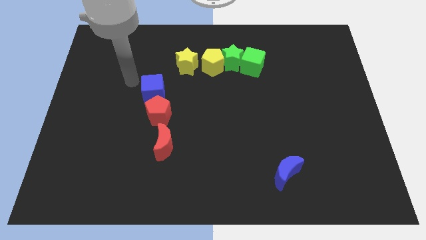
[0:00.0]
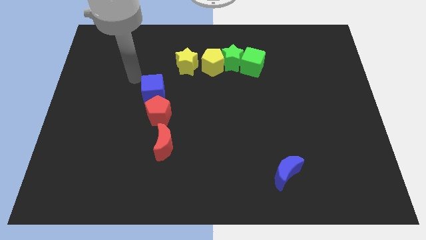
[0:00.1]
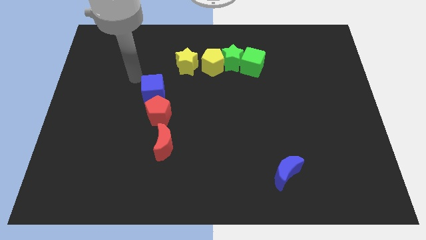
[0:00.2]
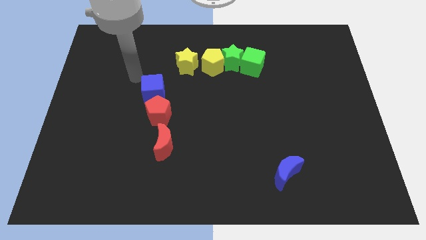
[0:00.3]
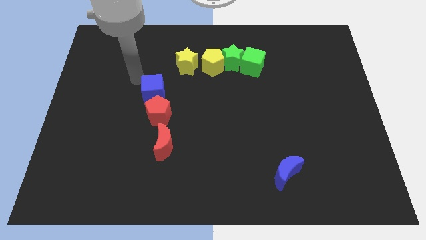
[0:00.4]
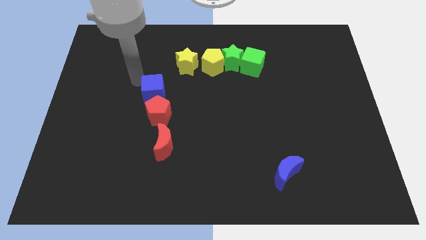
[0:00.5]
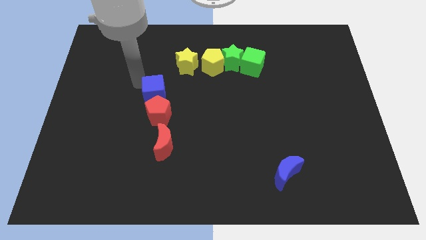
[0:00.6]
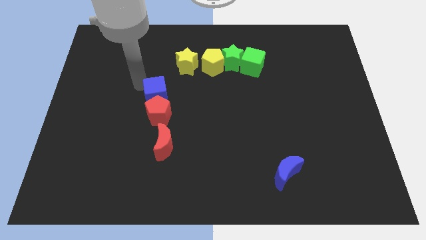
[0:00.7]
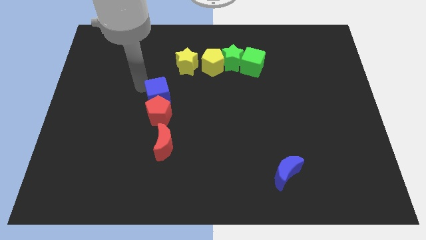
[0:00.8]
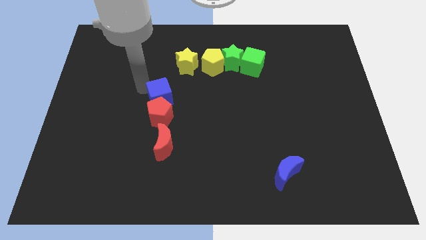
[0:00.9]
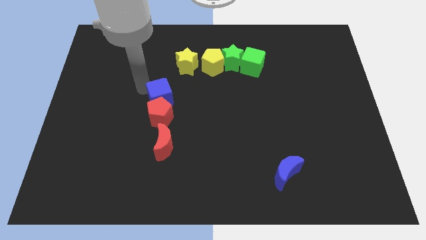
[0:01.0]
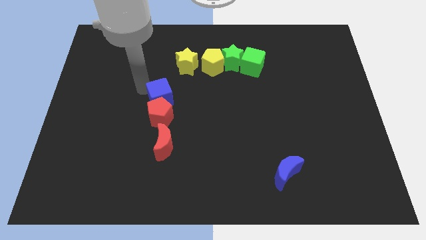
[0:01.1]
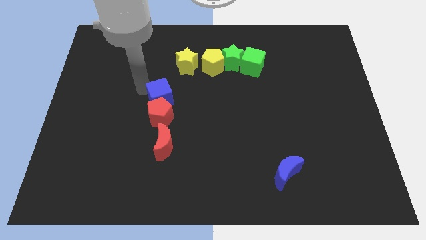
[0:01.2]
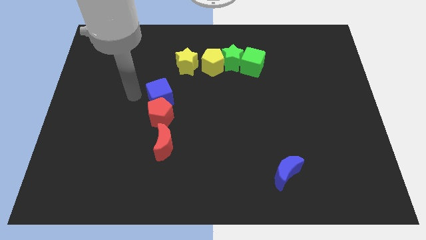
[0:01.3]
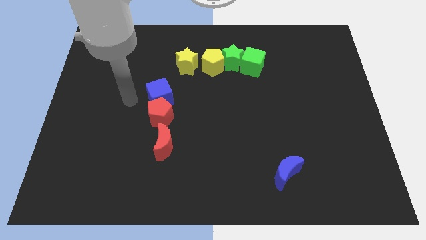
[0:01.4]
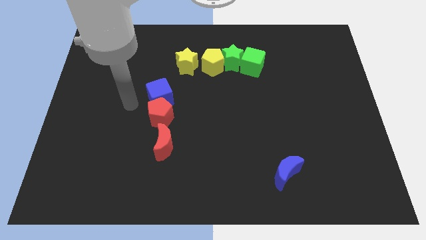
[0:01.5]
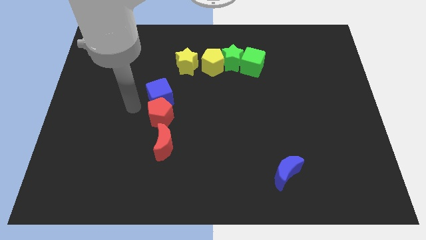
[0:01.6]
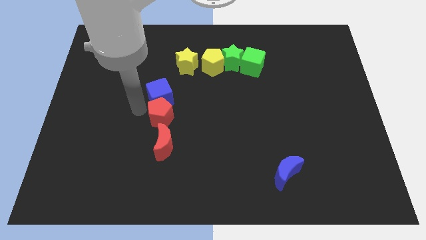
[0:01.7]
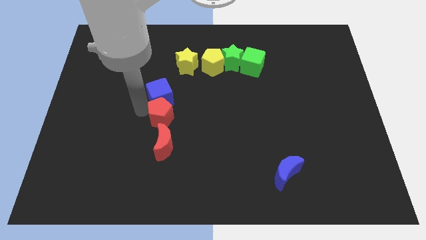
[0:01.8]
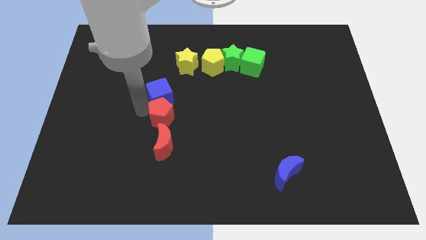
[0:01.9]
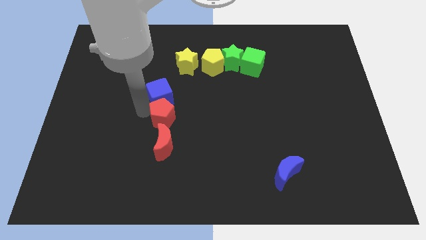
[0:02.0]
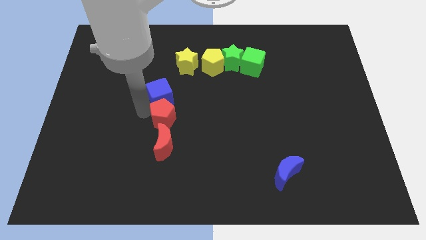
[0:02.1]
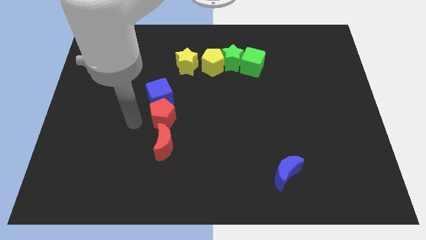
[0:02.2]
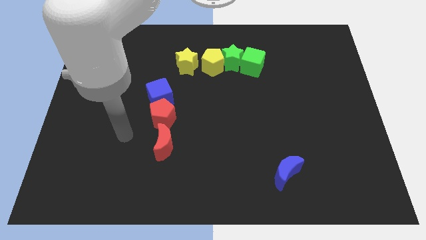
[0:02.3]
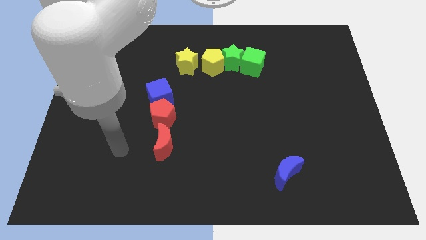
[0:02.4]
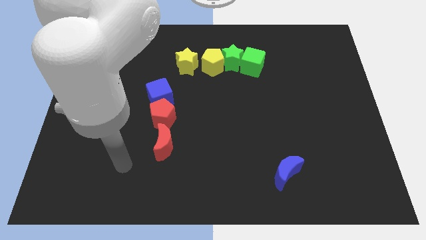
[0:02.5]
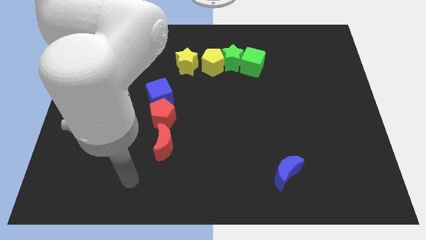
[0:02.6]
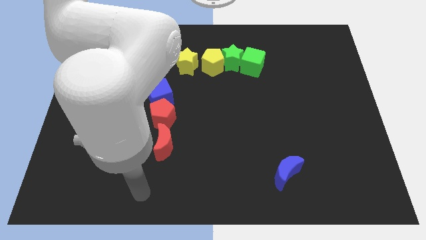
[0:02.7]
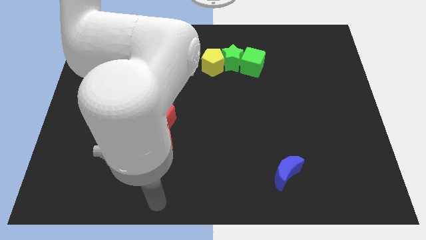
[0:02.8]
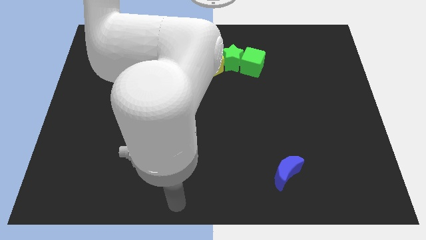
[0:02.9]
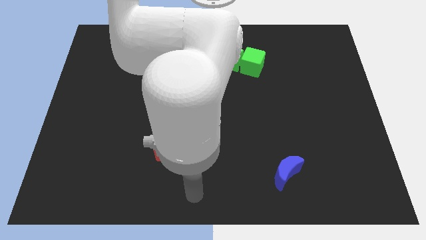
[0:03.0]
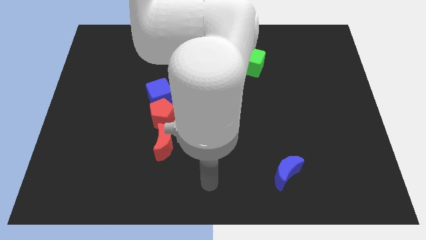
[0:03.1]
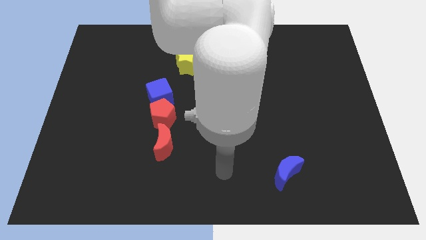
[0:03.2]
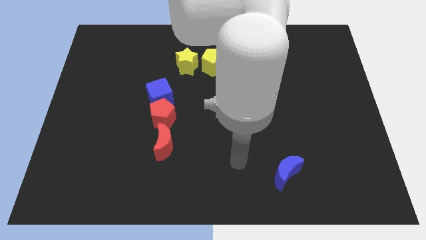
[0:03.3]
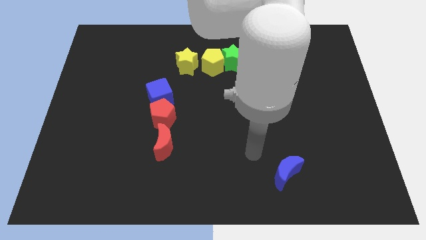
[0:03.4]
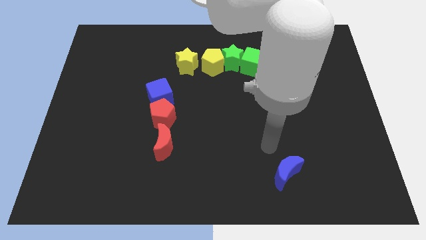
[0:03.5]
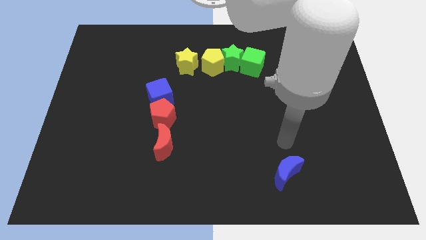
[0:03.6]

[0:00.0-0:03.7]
place blue cube along with red pentagon vertically above red moon

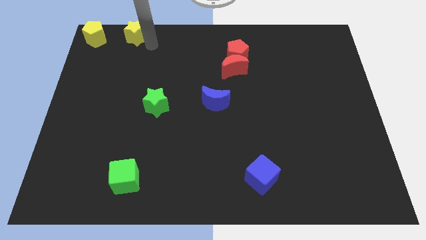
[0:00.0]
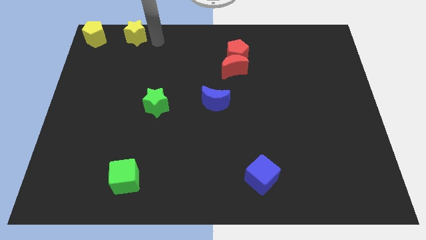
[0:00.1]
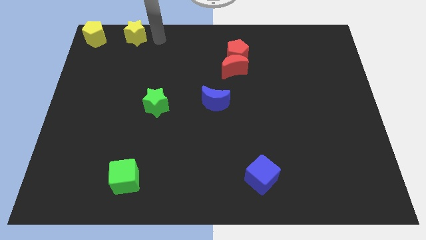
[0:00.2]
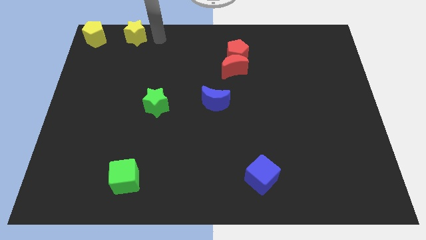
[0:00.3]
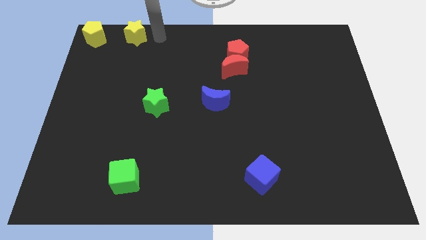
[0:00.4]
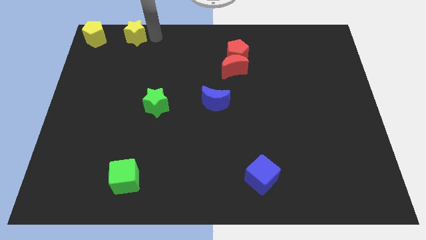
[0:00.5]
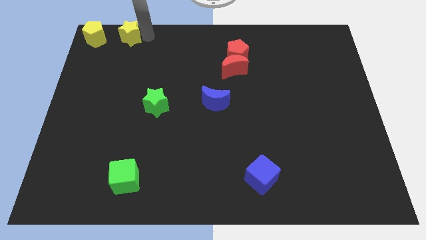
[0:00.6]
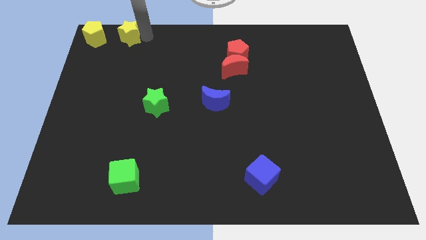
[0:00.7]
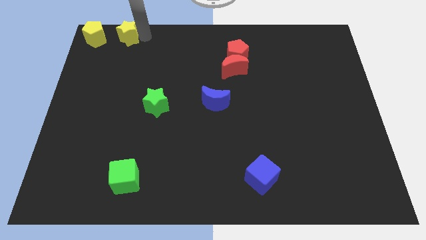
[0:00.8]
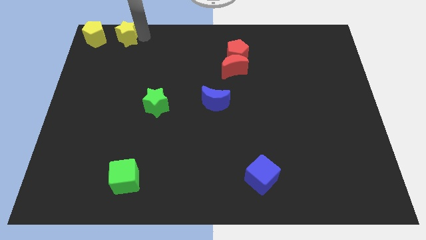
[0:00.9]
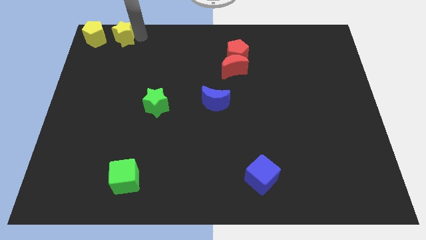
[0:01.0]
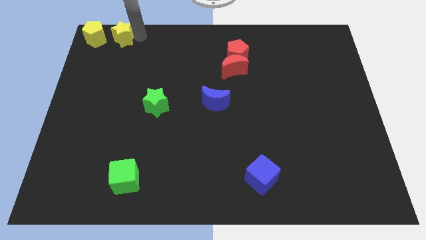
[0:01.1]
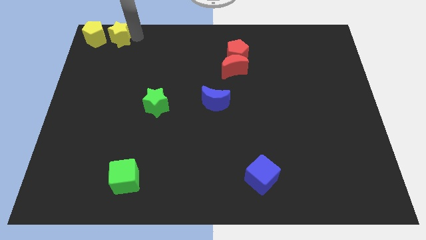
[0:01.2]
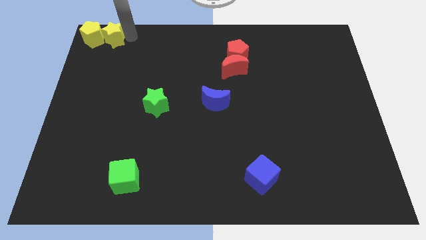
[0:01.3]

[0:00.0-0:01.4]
move the yellow star to the right of yellow pentagon

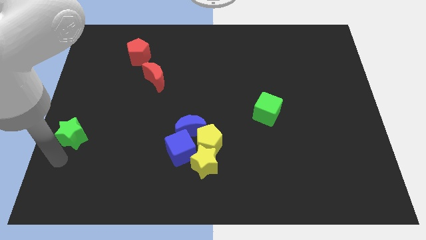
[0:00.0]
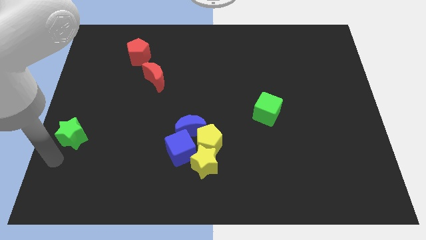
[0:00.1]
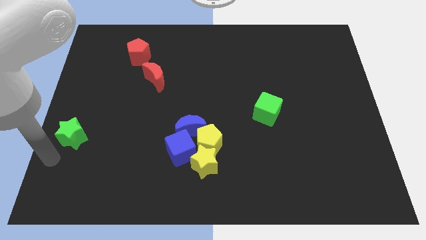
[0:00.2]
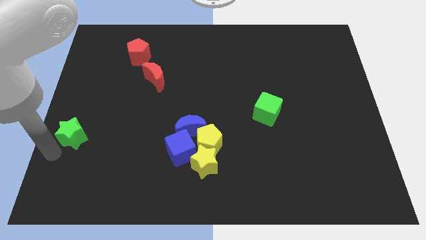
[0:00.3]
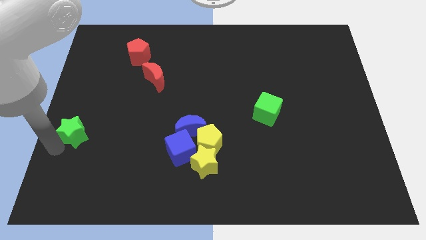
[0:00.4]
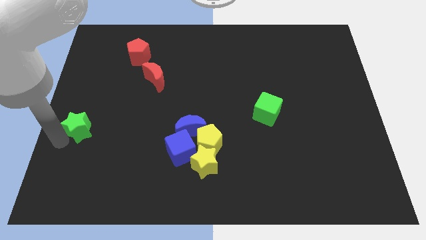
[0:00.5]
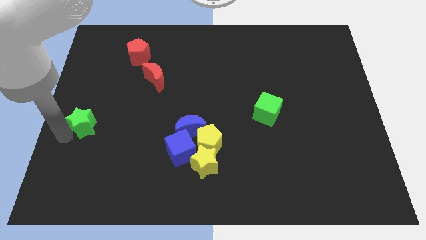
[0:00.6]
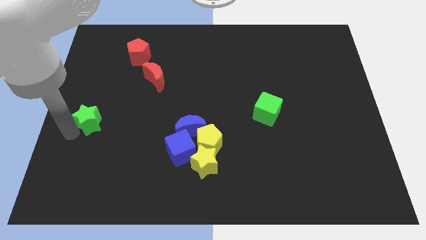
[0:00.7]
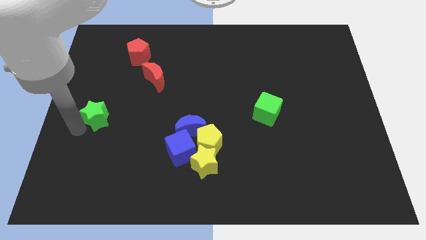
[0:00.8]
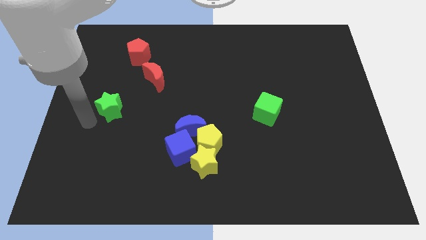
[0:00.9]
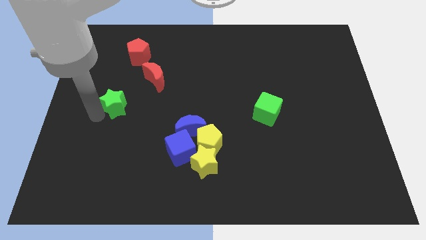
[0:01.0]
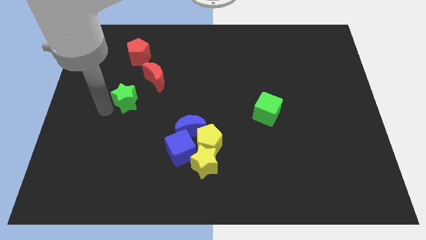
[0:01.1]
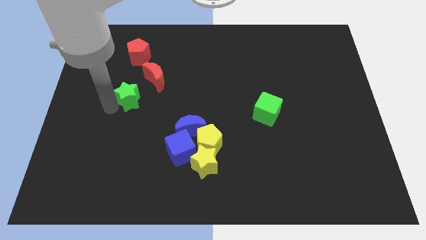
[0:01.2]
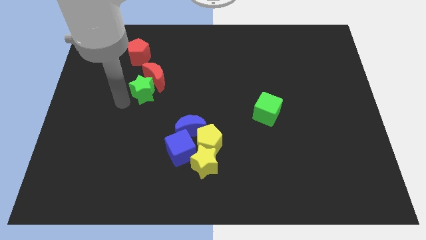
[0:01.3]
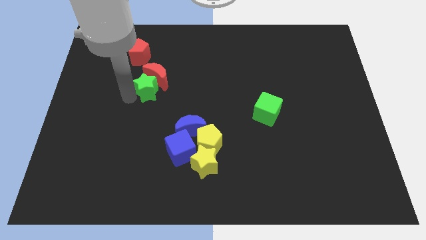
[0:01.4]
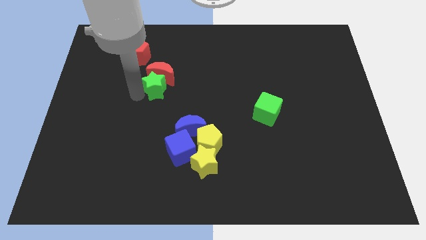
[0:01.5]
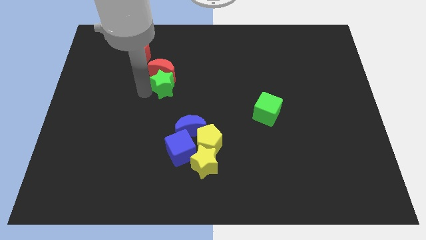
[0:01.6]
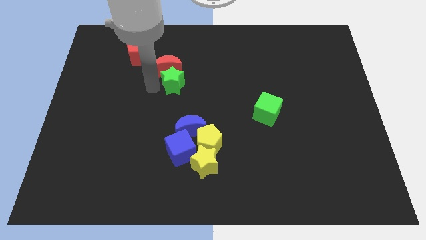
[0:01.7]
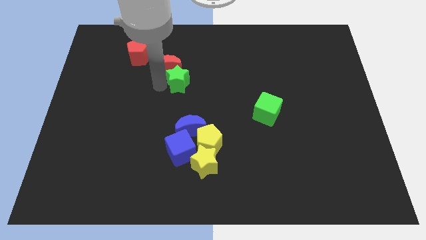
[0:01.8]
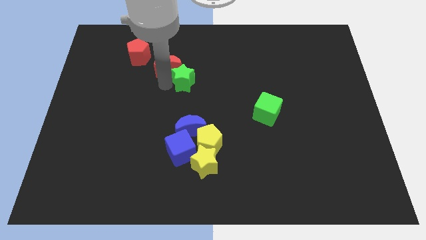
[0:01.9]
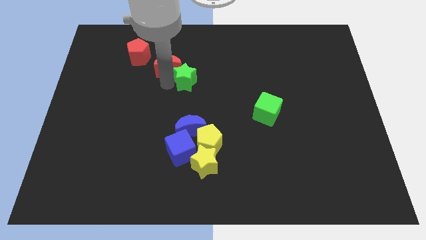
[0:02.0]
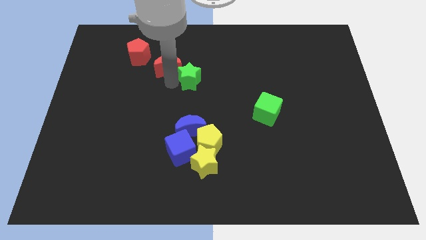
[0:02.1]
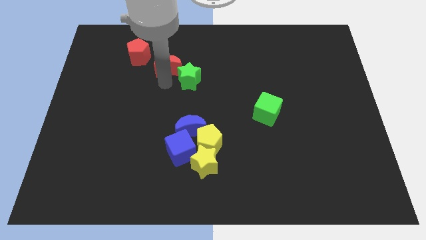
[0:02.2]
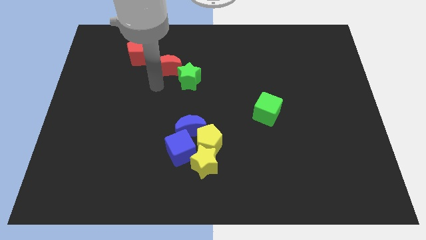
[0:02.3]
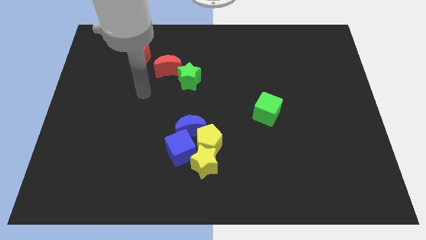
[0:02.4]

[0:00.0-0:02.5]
move the green star at the top side of the group of yellow and blue blocks

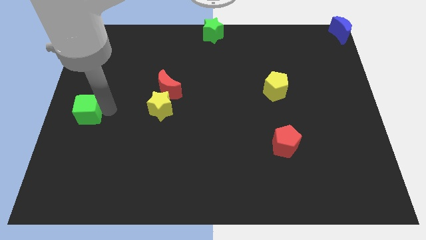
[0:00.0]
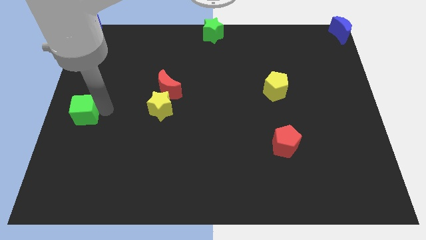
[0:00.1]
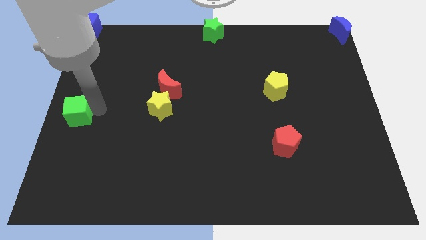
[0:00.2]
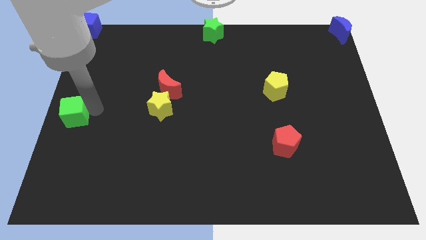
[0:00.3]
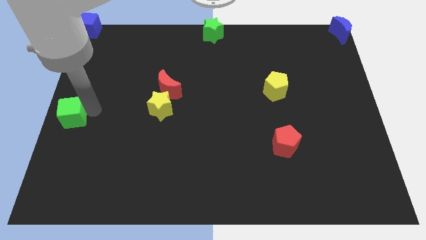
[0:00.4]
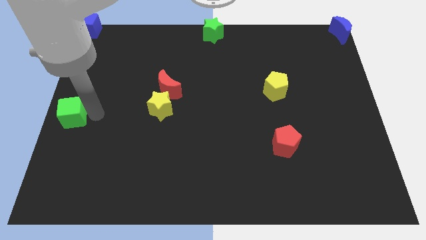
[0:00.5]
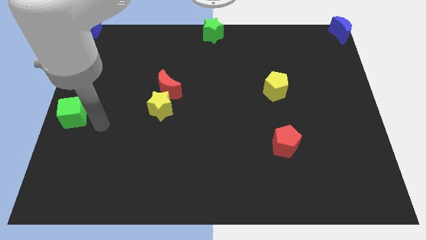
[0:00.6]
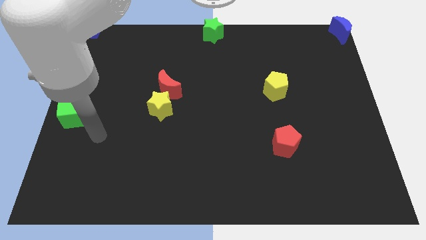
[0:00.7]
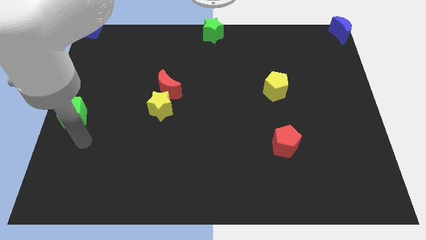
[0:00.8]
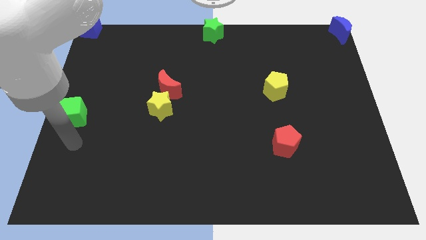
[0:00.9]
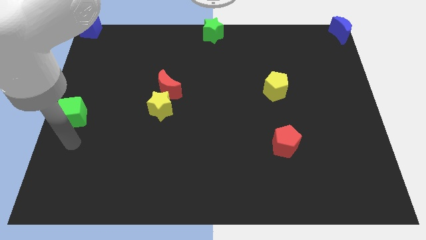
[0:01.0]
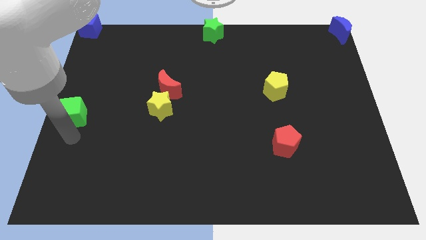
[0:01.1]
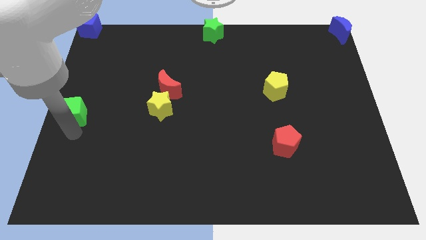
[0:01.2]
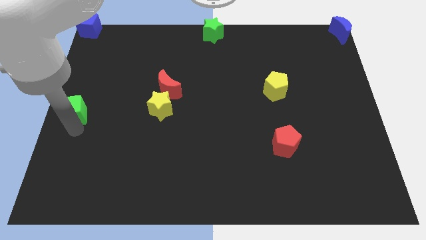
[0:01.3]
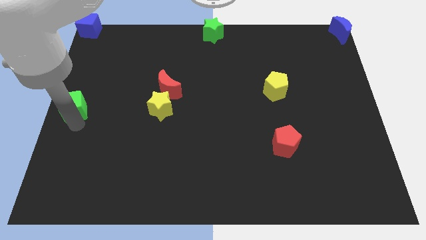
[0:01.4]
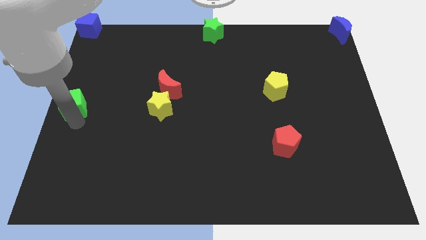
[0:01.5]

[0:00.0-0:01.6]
move the green cube to the left center of the board
